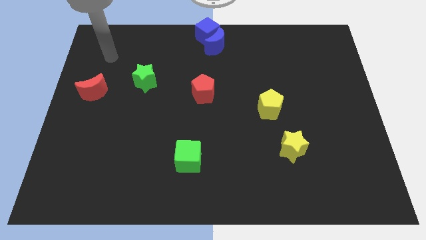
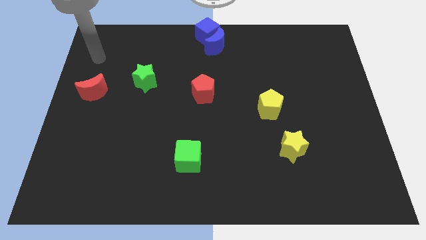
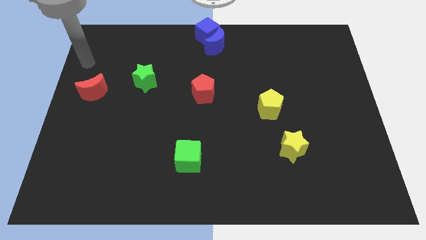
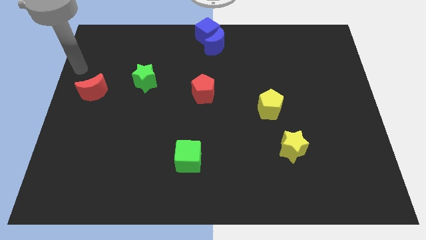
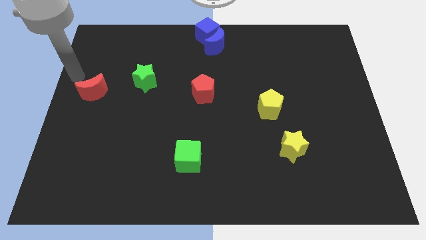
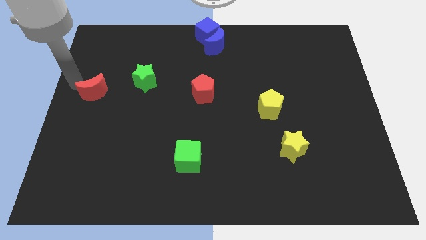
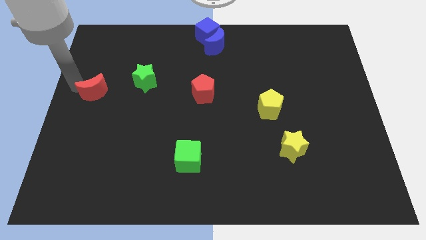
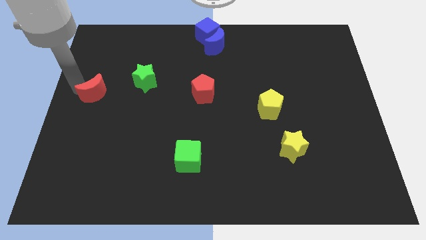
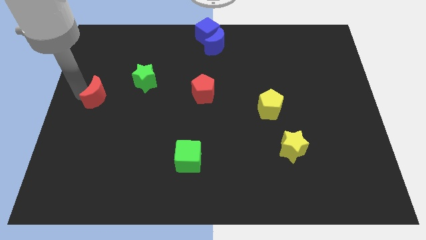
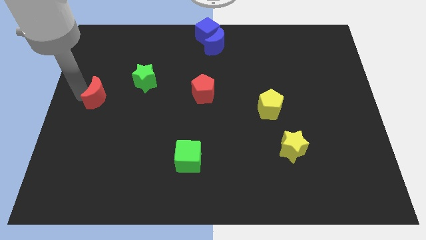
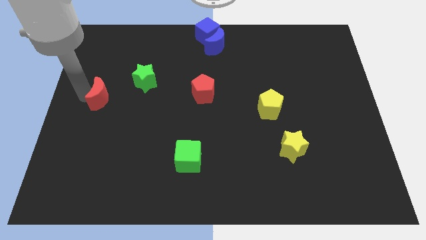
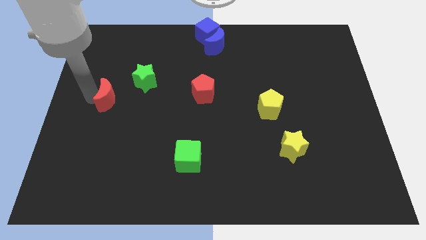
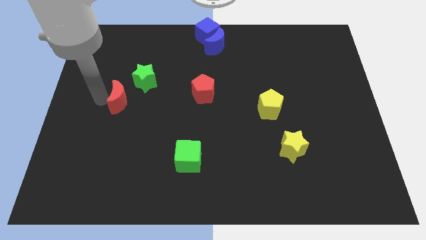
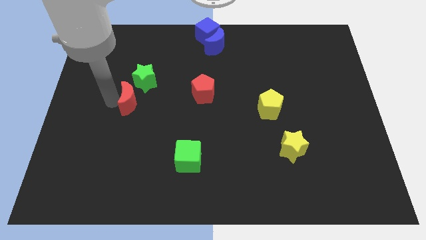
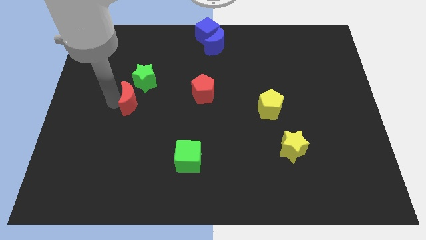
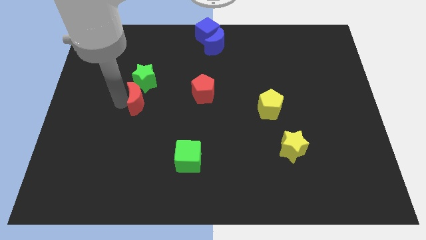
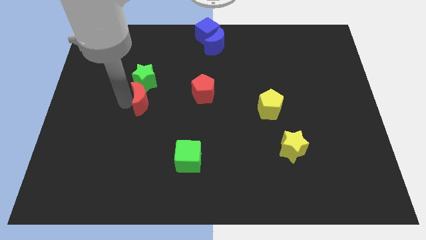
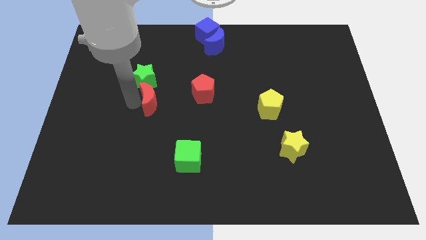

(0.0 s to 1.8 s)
move red moon to the bottom of green star

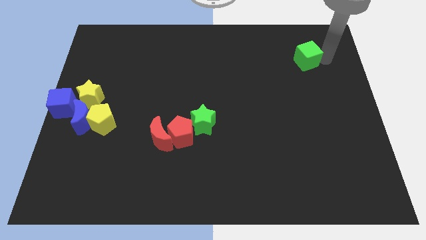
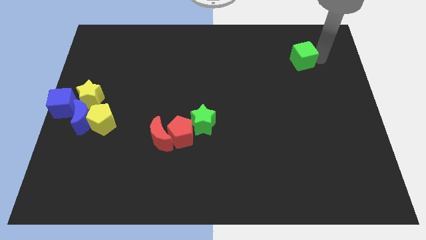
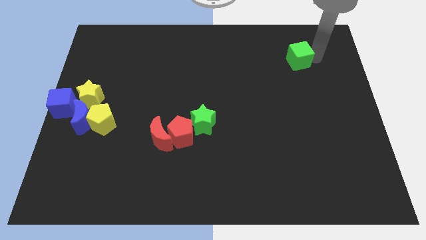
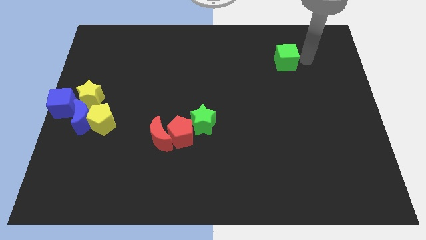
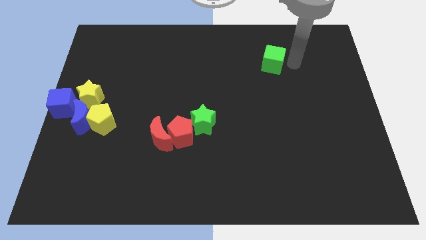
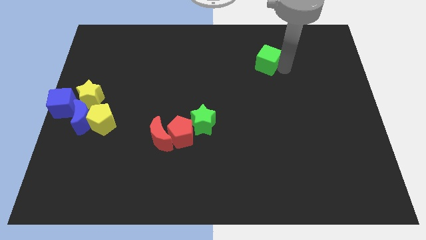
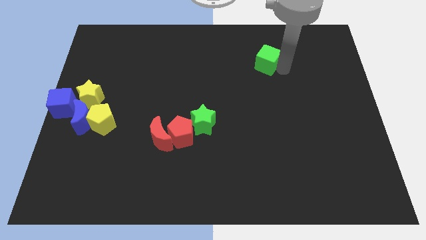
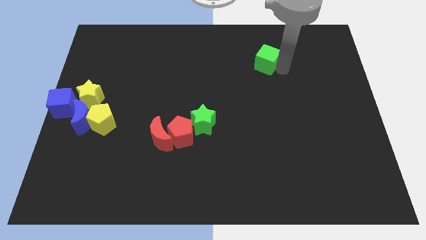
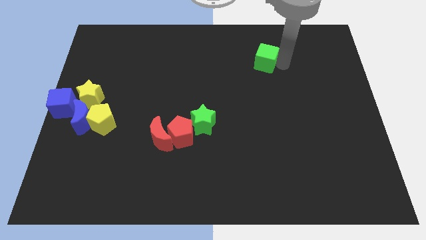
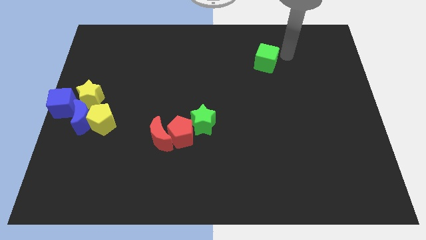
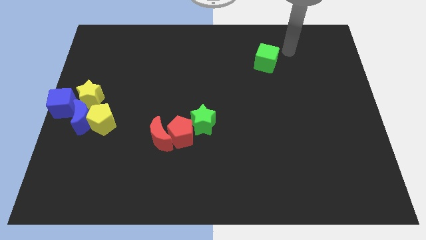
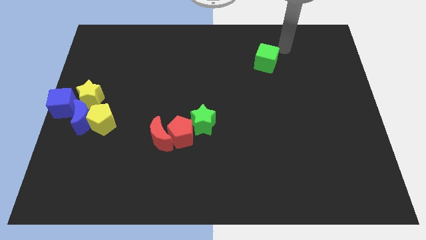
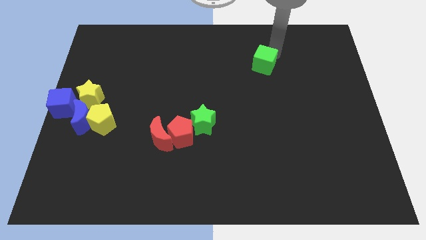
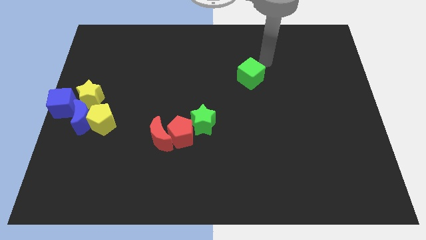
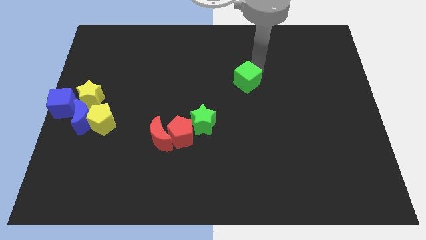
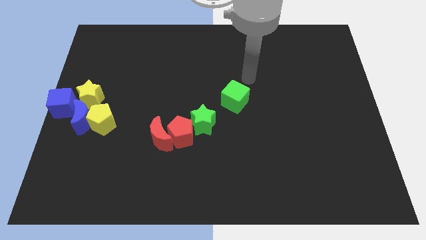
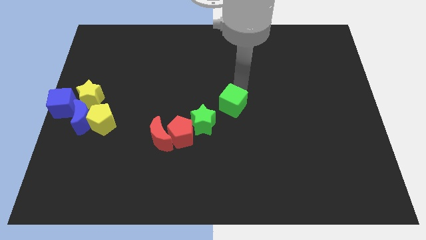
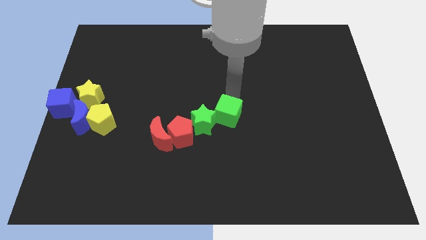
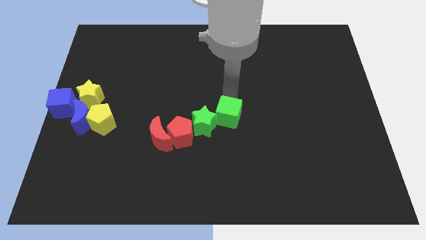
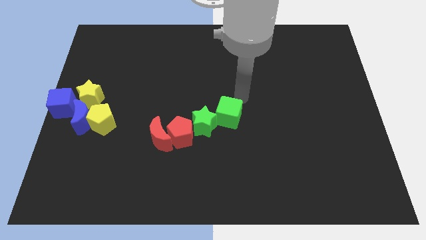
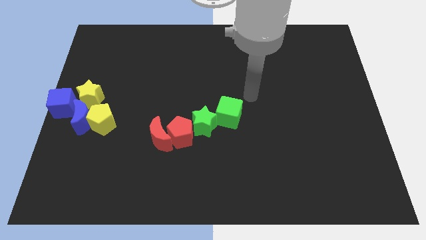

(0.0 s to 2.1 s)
move green cube into green star

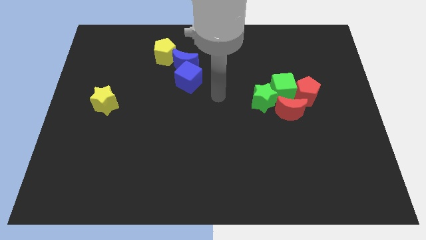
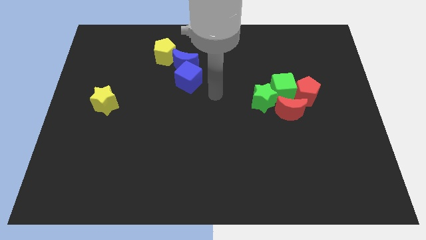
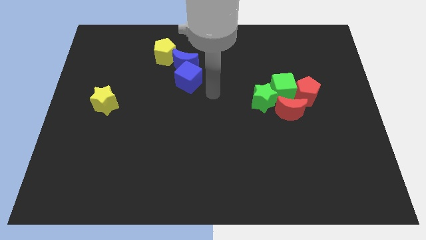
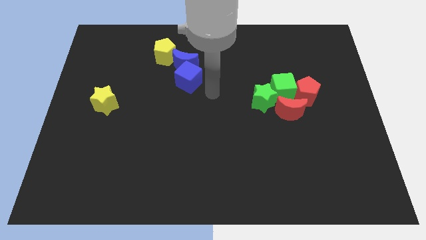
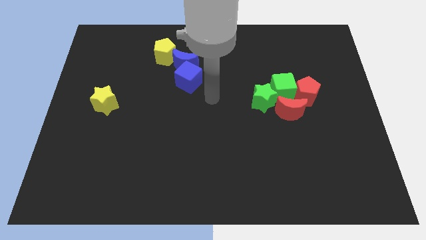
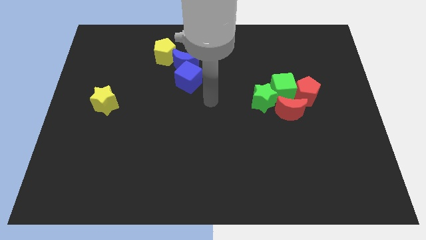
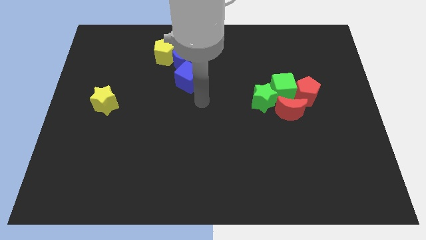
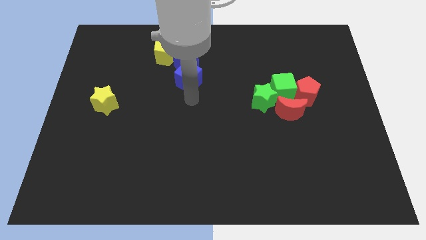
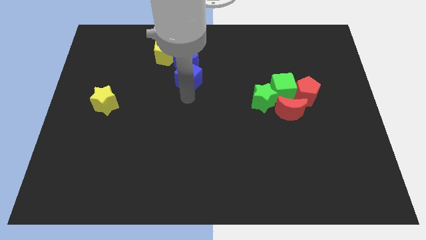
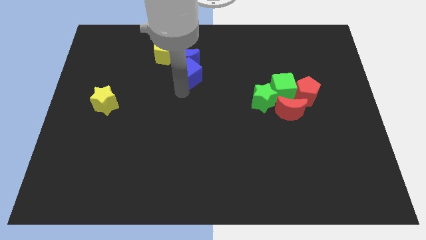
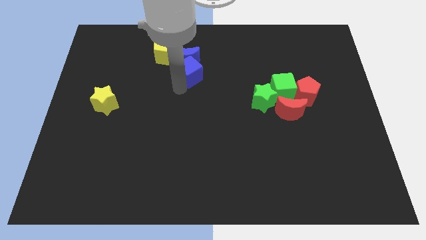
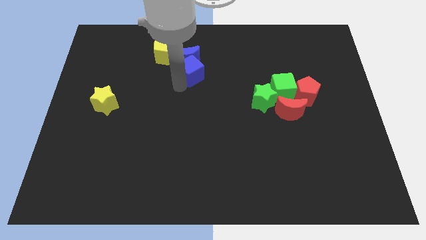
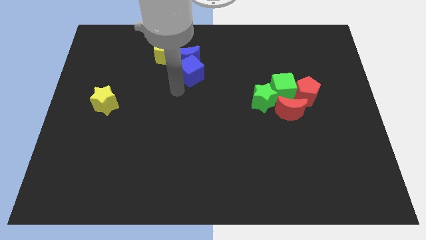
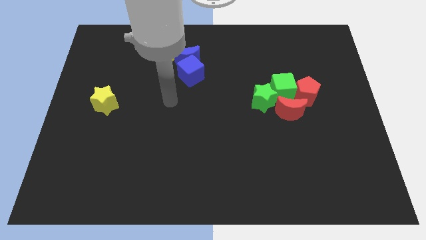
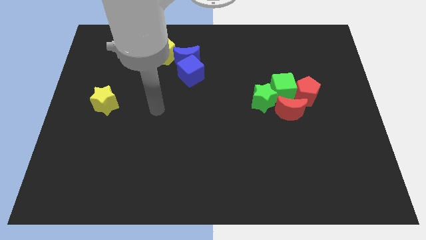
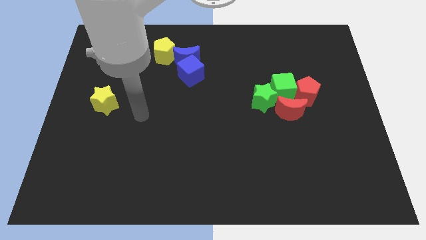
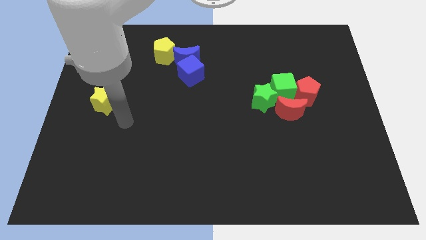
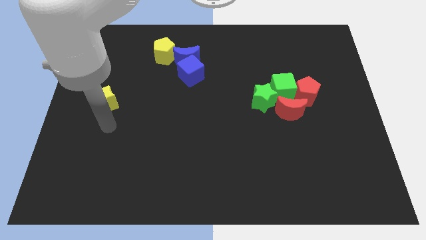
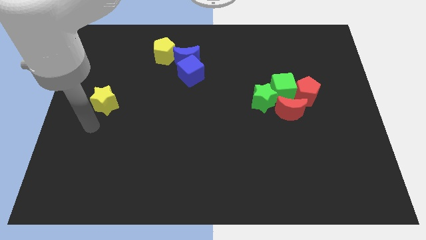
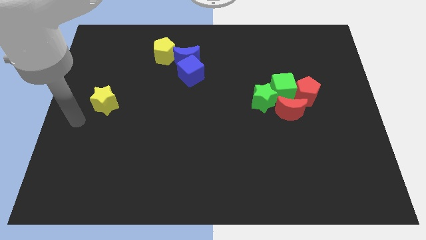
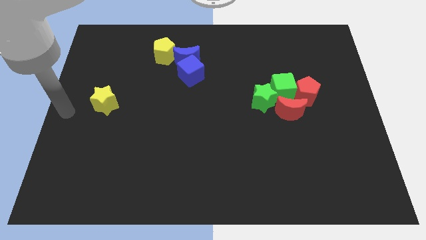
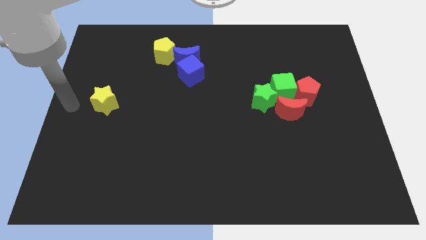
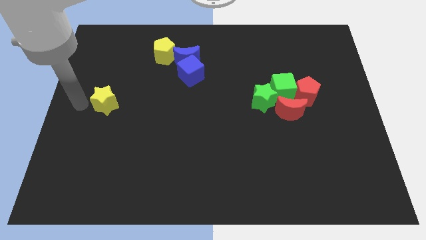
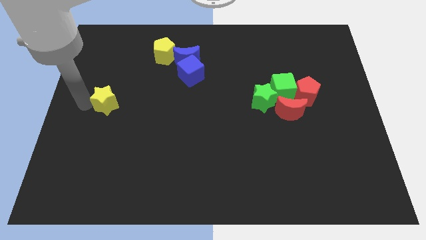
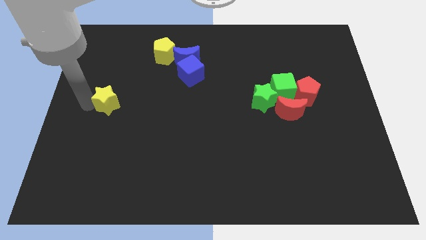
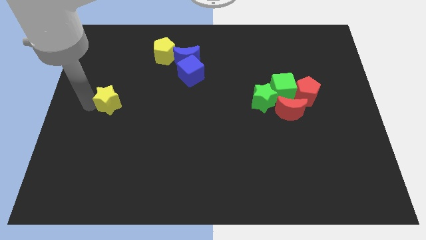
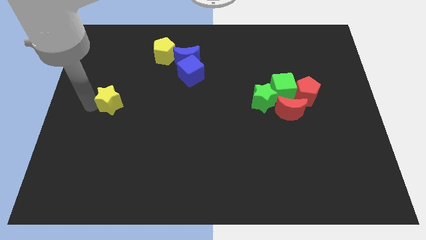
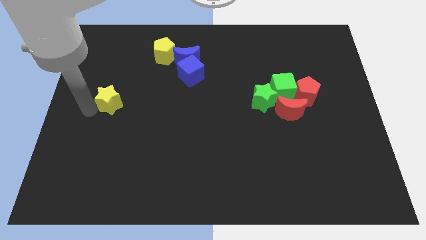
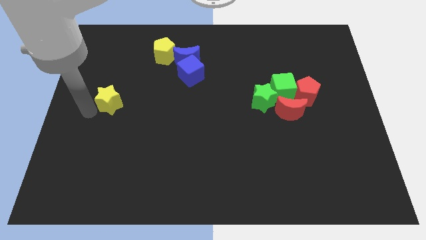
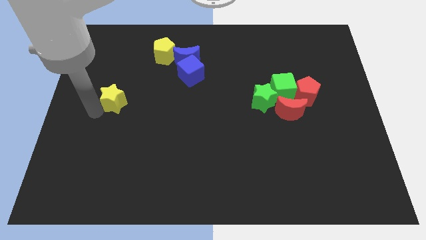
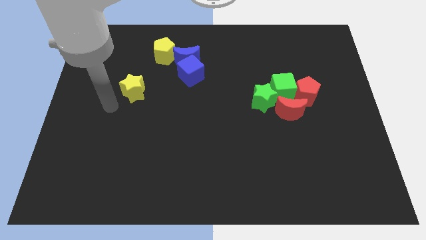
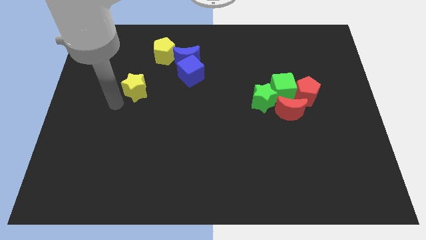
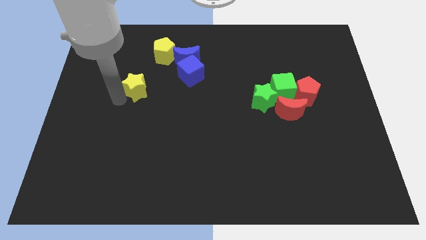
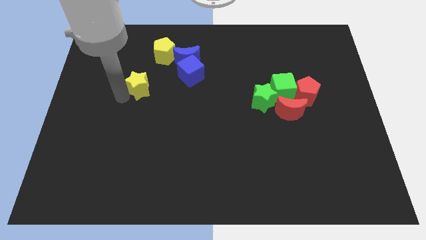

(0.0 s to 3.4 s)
move the yellow star to the left side of the blue cube

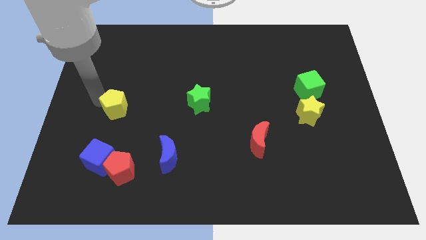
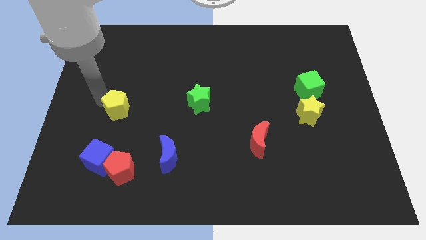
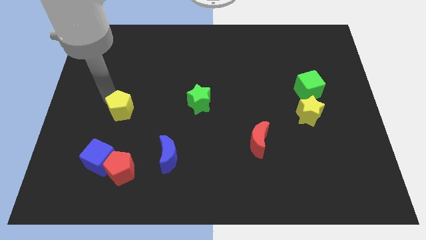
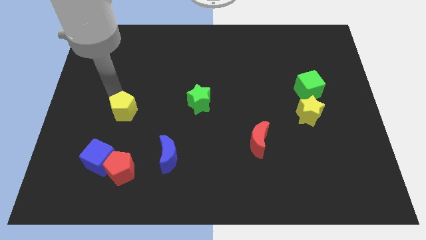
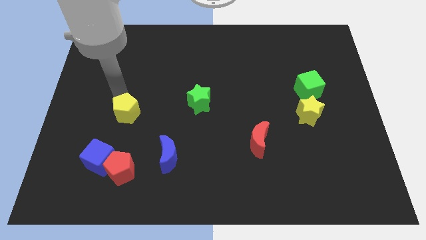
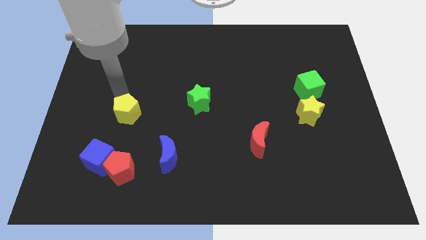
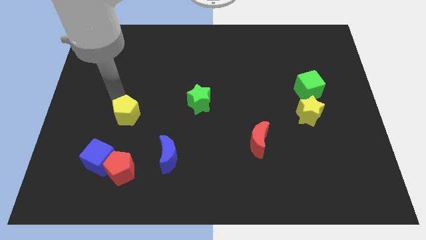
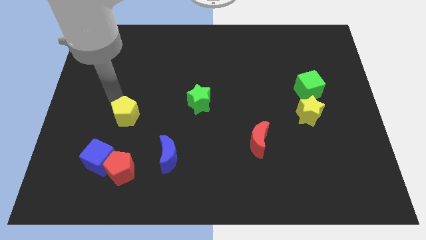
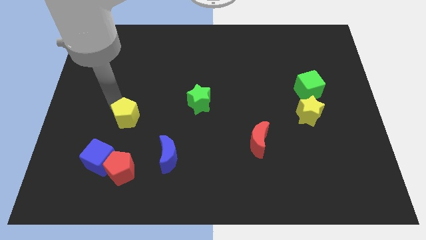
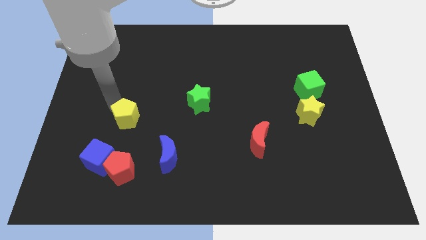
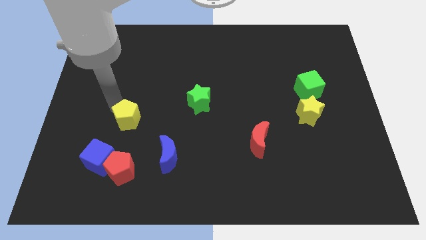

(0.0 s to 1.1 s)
move the yellow pentagon above the red pentagon

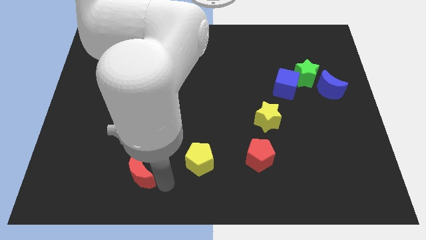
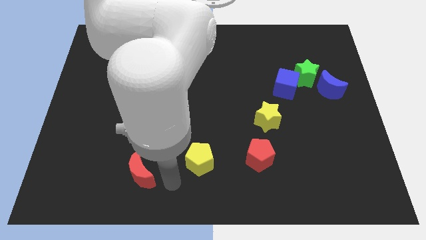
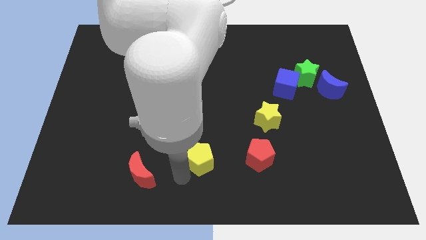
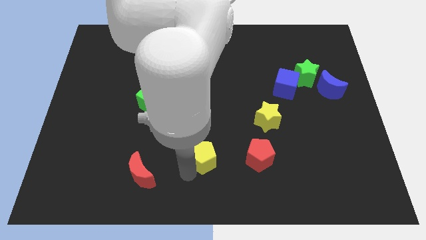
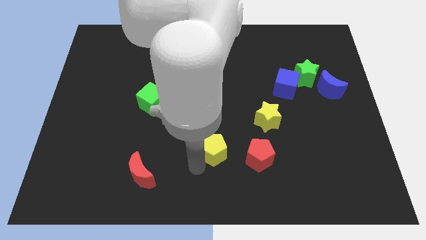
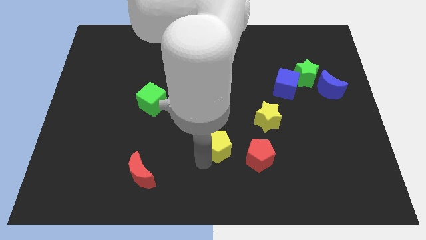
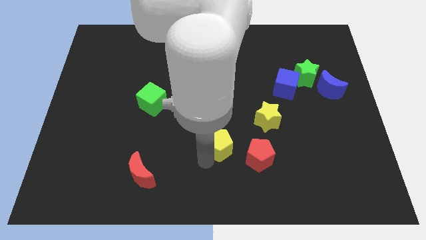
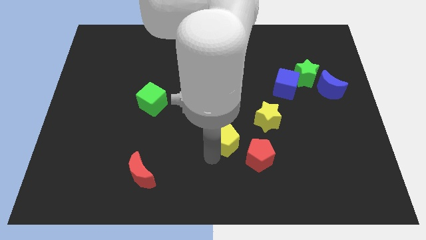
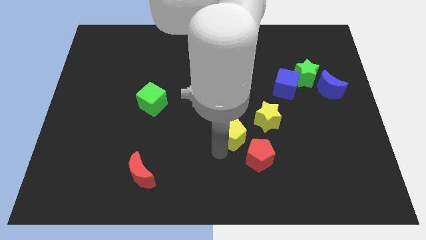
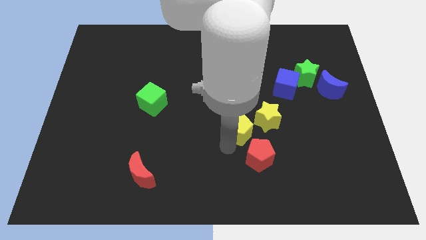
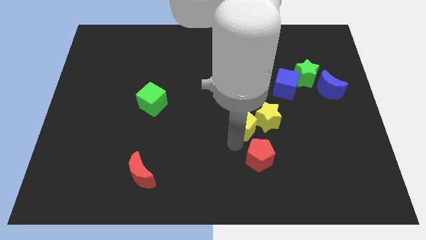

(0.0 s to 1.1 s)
slide the yellow pentagon diagonal to the red pentagon
